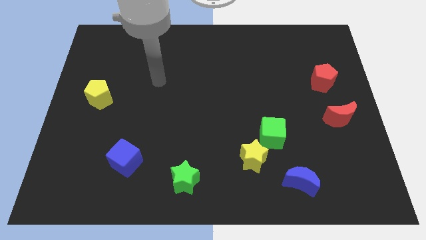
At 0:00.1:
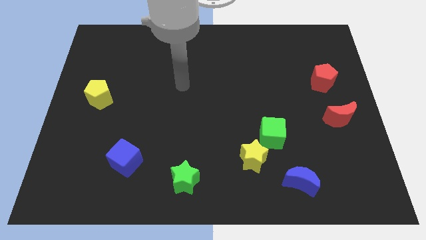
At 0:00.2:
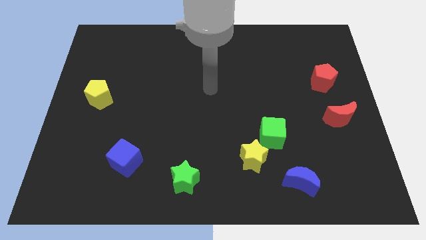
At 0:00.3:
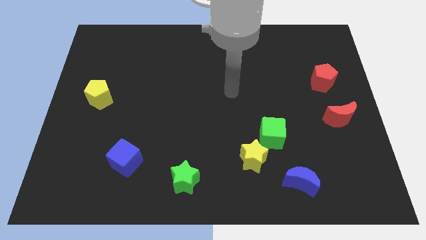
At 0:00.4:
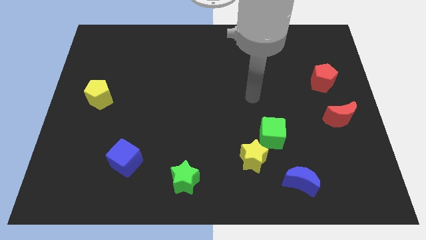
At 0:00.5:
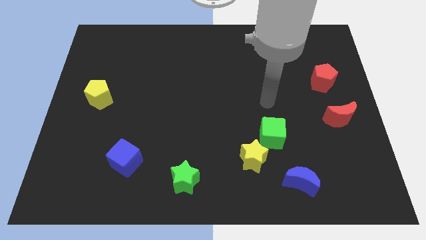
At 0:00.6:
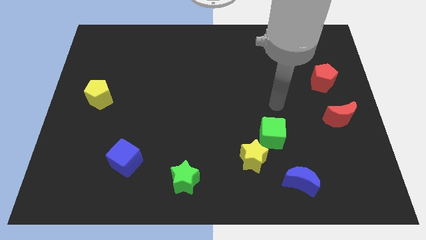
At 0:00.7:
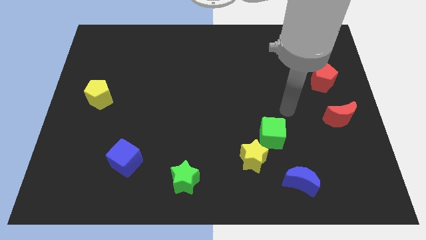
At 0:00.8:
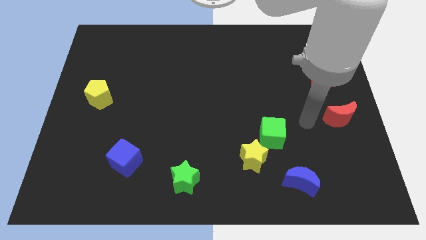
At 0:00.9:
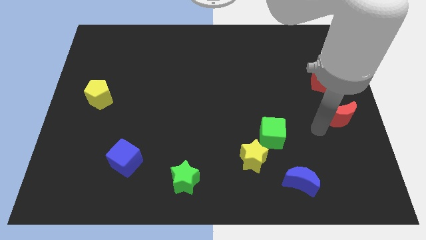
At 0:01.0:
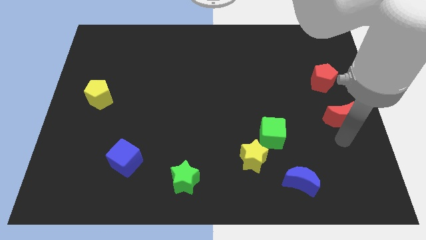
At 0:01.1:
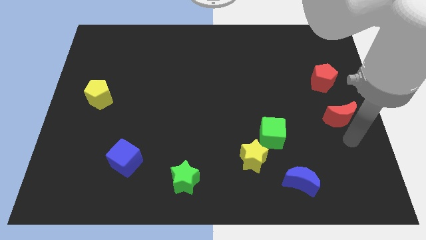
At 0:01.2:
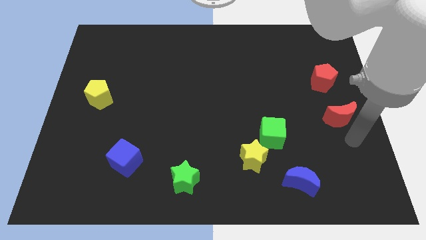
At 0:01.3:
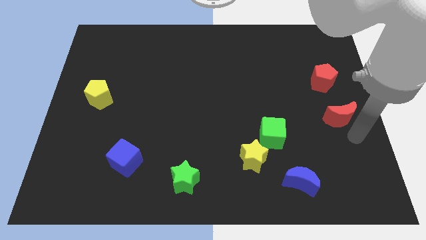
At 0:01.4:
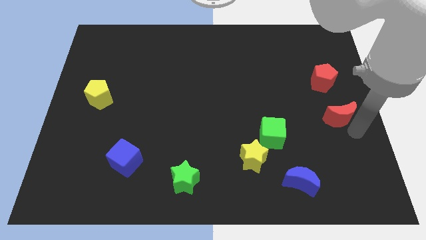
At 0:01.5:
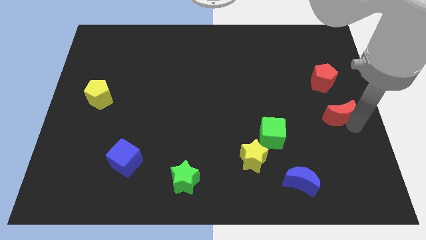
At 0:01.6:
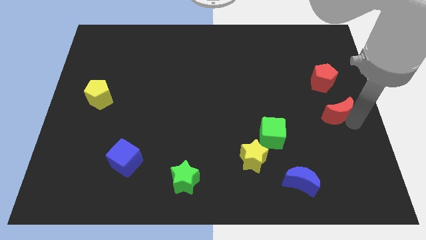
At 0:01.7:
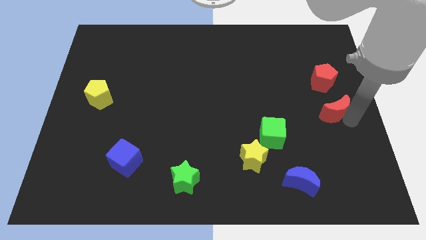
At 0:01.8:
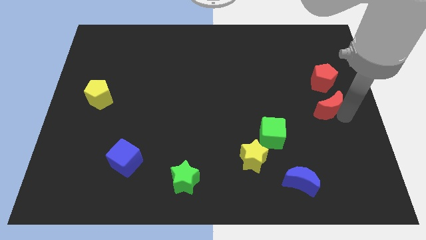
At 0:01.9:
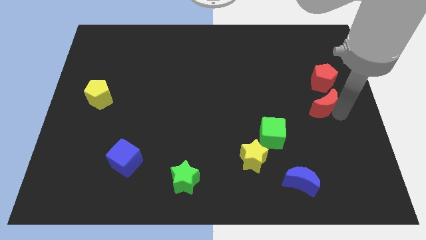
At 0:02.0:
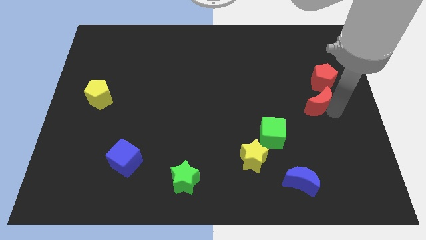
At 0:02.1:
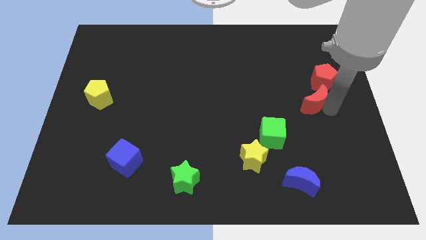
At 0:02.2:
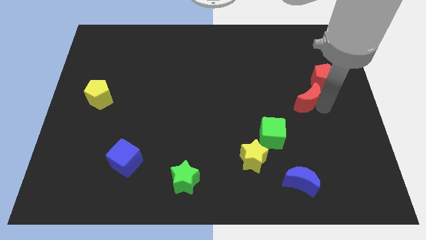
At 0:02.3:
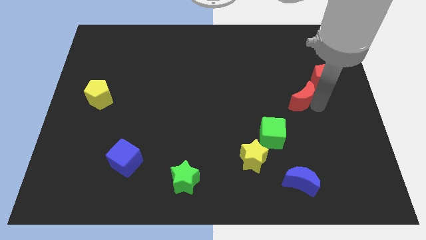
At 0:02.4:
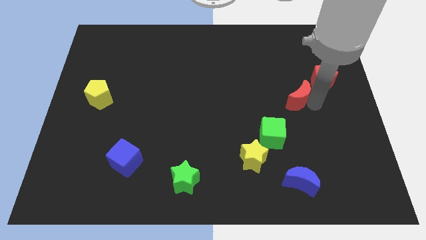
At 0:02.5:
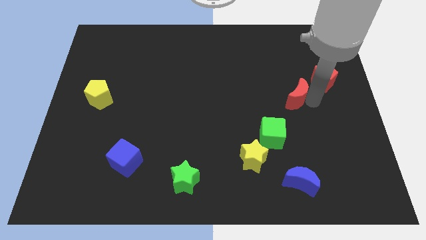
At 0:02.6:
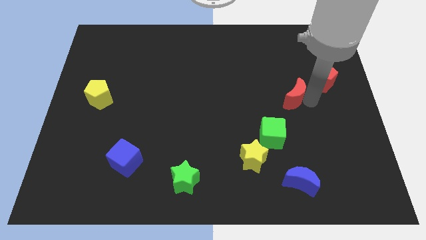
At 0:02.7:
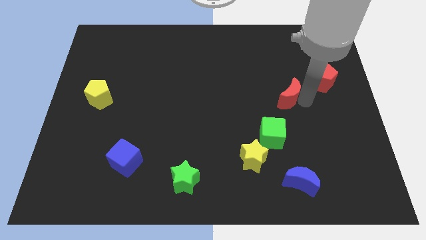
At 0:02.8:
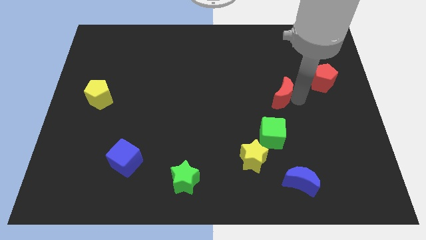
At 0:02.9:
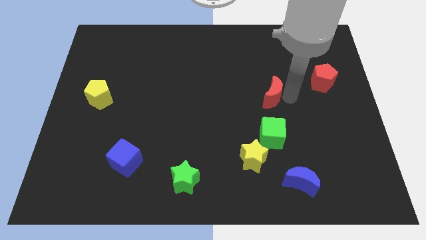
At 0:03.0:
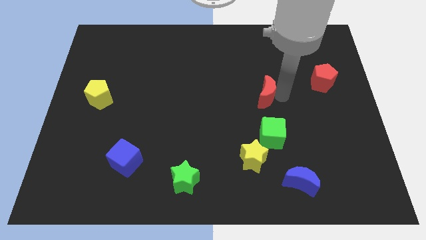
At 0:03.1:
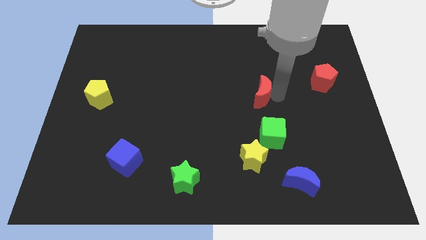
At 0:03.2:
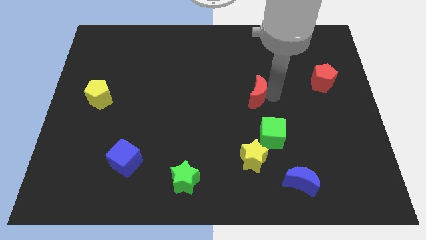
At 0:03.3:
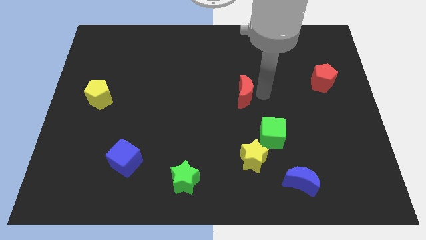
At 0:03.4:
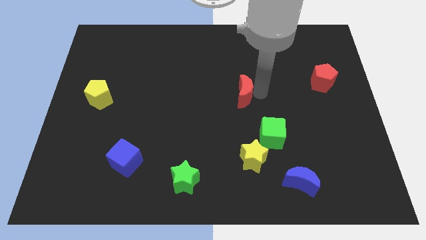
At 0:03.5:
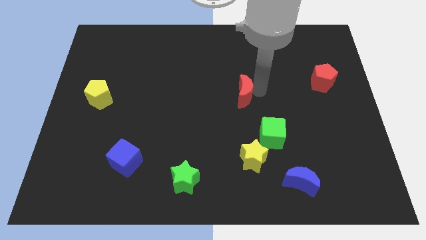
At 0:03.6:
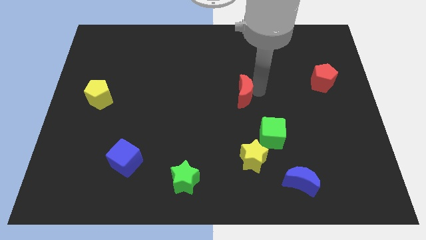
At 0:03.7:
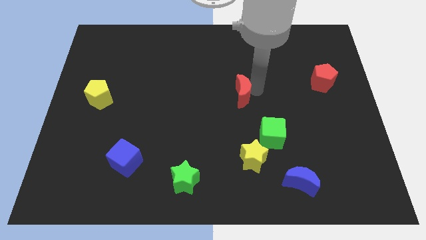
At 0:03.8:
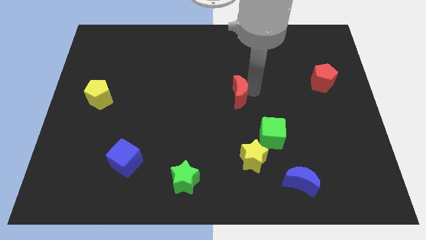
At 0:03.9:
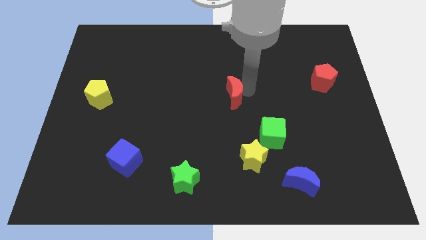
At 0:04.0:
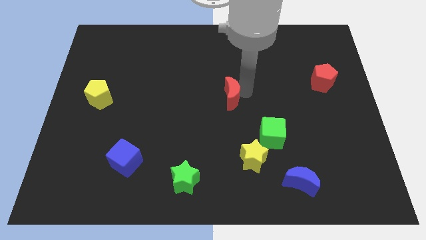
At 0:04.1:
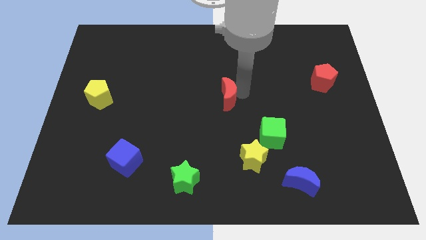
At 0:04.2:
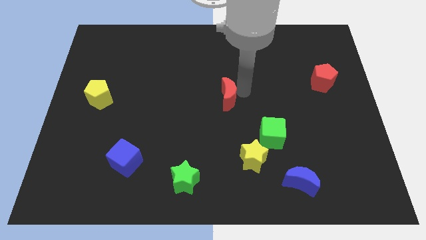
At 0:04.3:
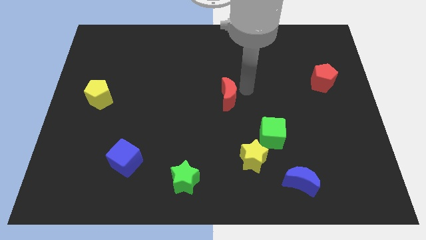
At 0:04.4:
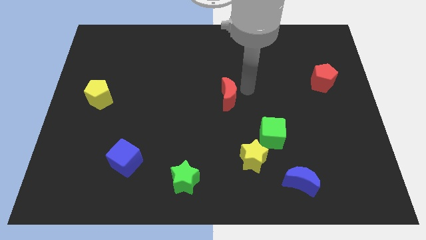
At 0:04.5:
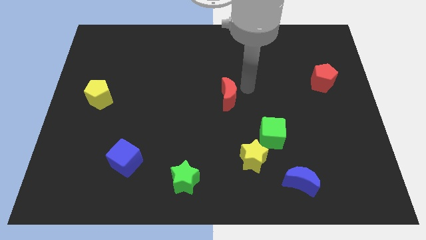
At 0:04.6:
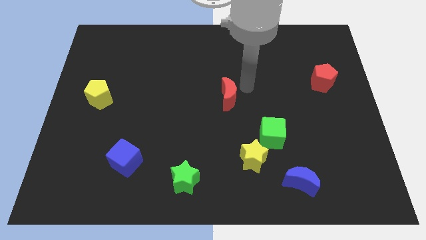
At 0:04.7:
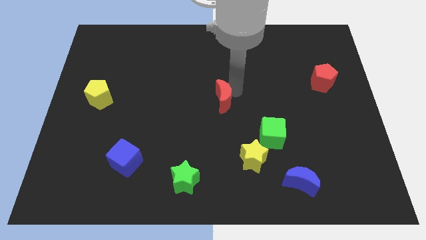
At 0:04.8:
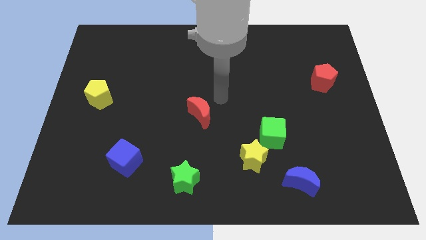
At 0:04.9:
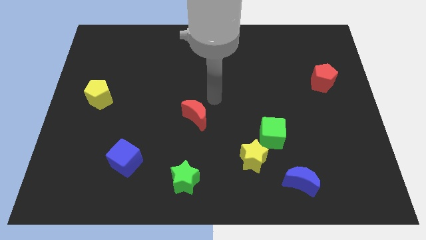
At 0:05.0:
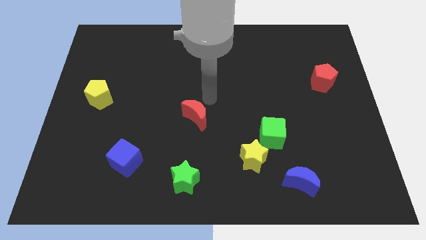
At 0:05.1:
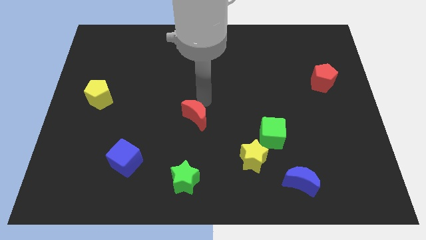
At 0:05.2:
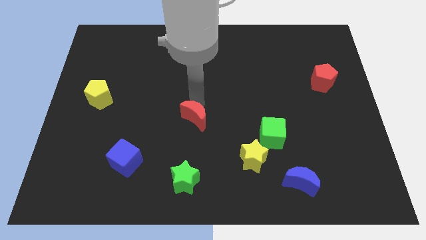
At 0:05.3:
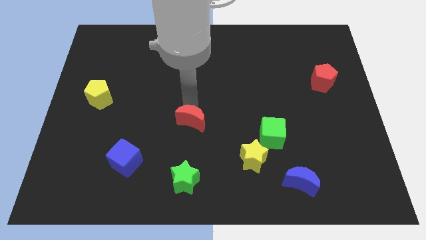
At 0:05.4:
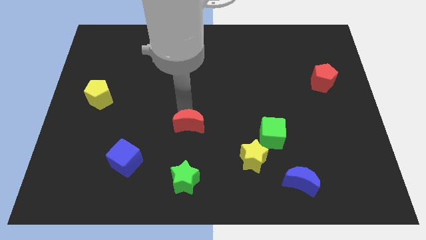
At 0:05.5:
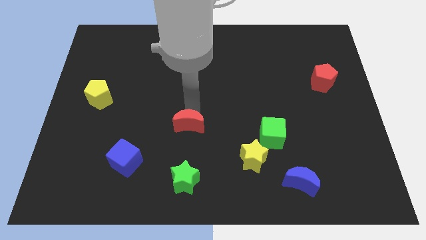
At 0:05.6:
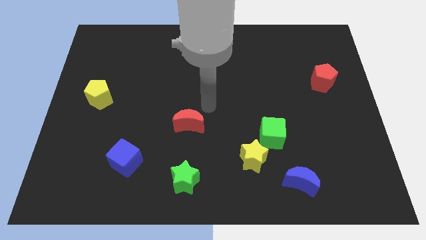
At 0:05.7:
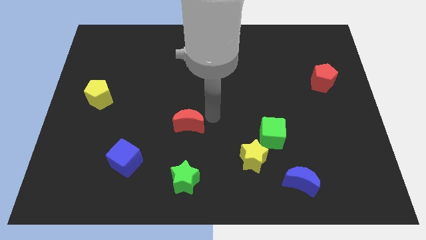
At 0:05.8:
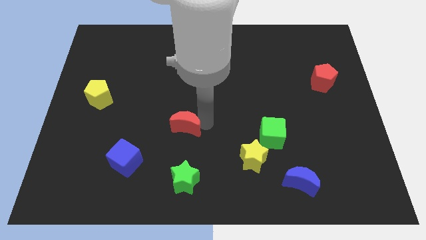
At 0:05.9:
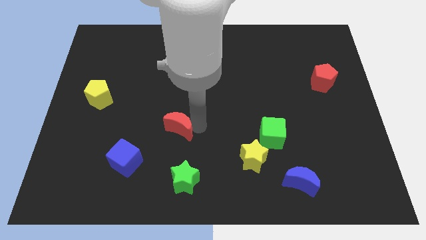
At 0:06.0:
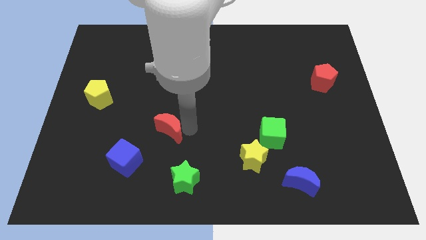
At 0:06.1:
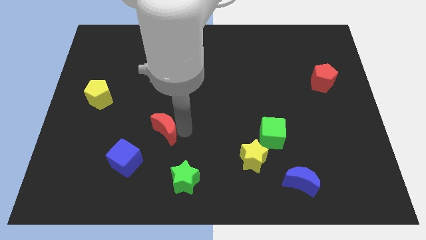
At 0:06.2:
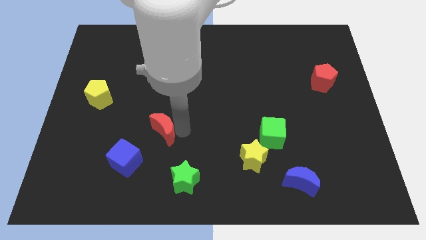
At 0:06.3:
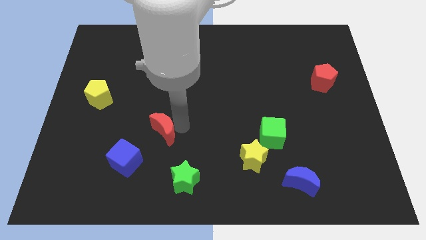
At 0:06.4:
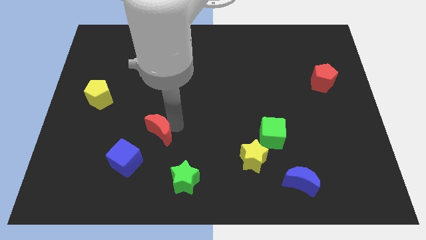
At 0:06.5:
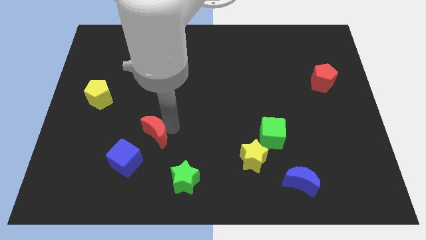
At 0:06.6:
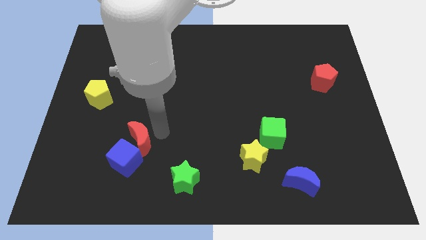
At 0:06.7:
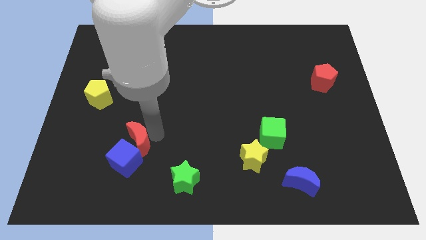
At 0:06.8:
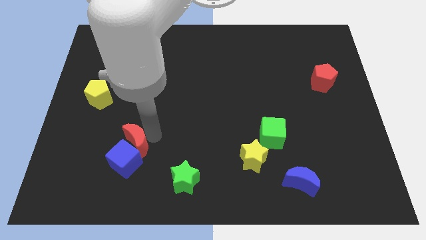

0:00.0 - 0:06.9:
put the red moon next to the blue cube

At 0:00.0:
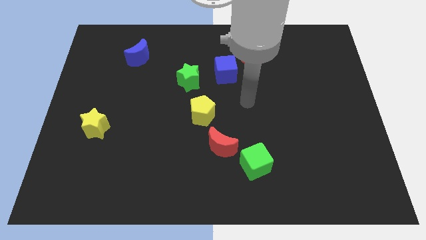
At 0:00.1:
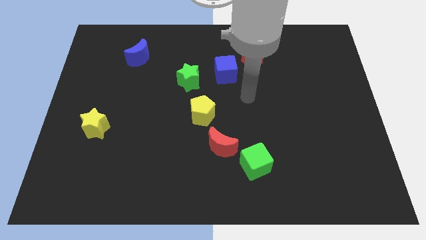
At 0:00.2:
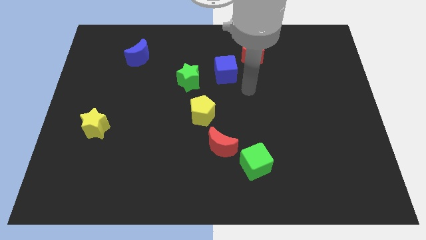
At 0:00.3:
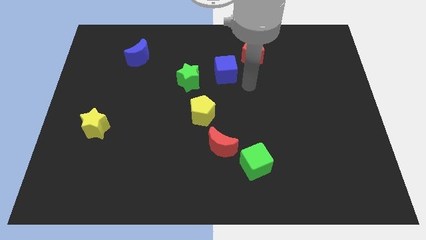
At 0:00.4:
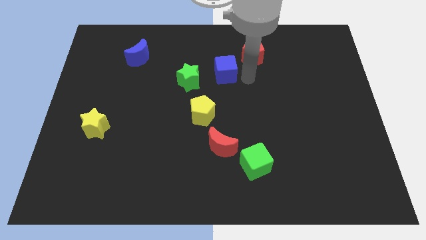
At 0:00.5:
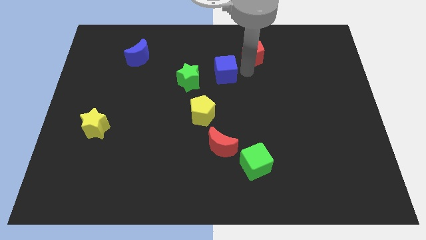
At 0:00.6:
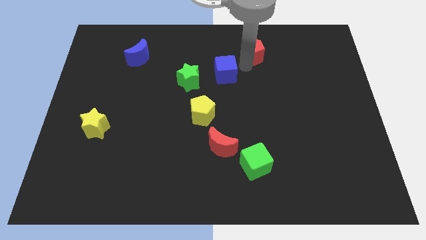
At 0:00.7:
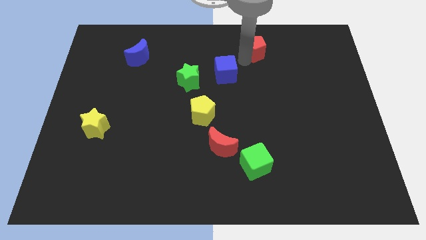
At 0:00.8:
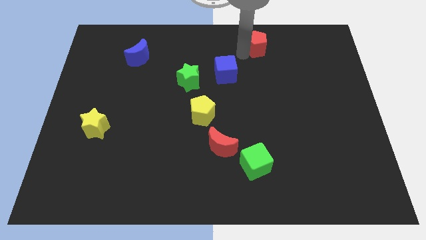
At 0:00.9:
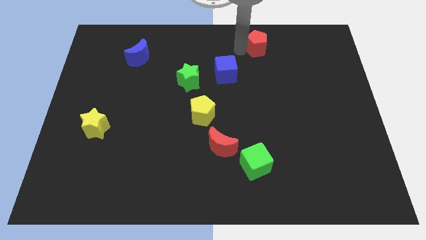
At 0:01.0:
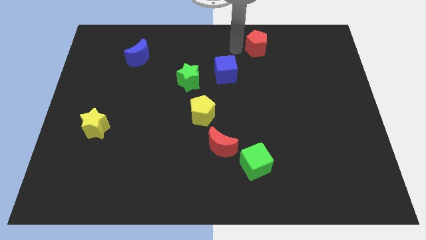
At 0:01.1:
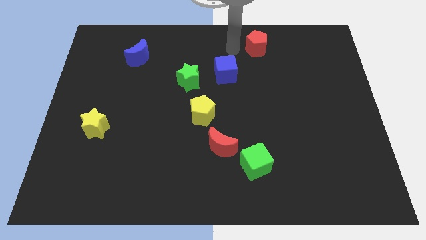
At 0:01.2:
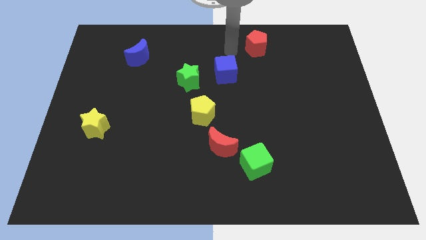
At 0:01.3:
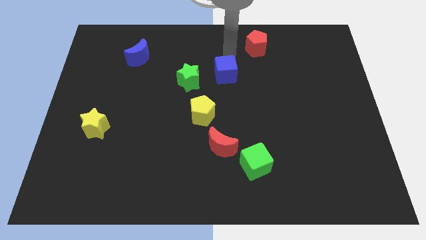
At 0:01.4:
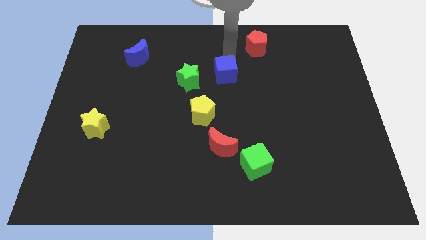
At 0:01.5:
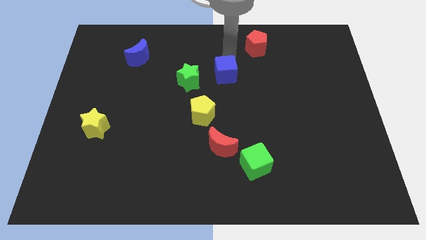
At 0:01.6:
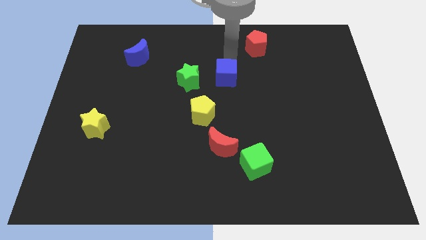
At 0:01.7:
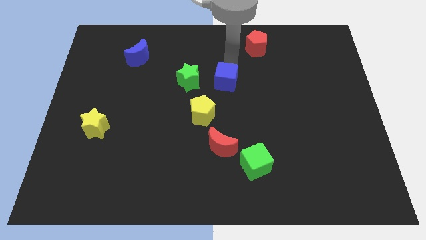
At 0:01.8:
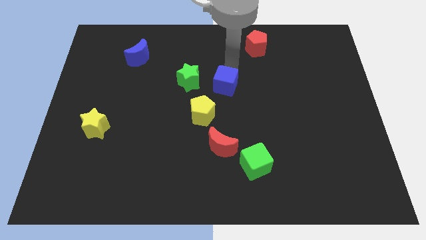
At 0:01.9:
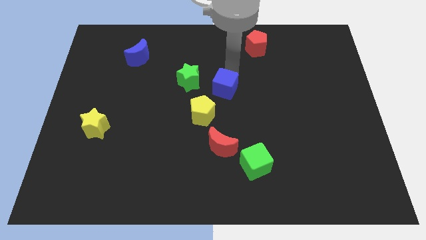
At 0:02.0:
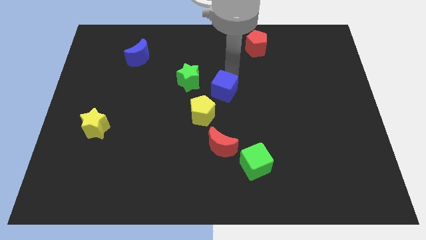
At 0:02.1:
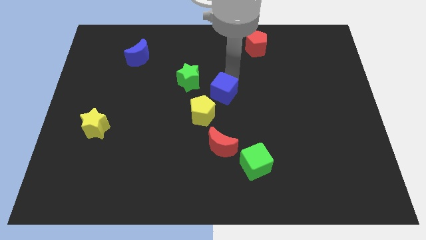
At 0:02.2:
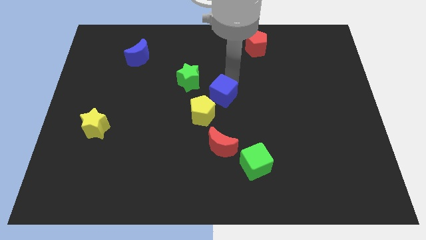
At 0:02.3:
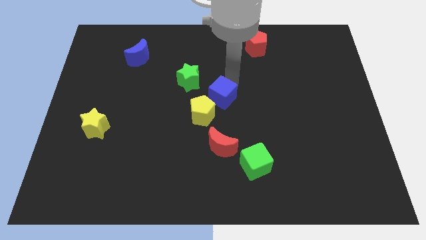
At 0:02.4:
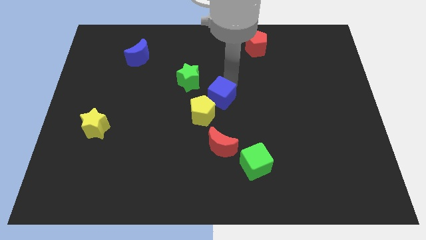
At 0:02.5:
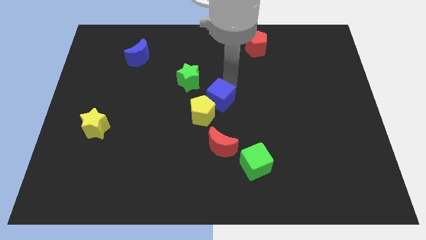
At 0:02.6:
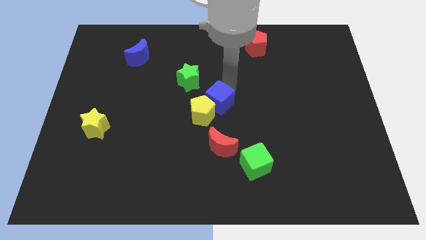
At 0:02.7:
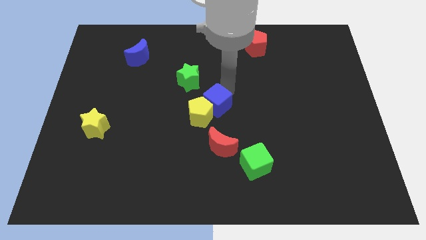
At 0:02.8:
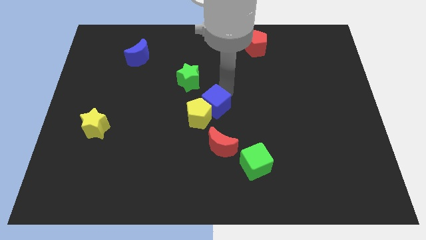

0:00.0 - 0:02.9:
push the blue cube next to the yellow pentagon
